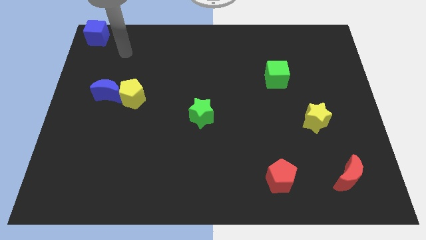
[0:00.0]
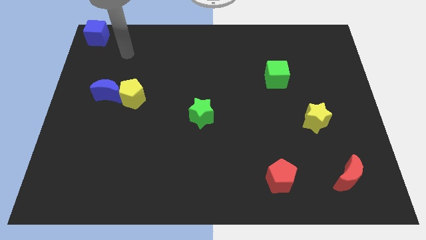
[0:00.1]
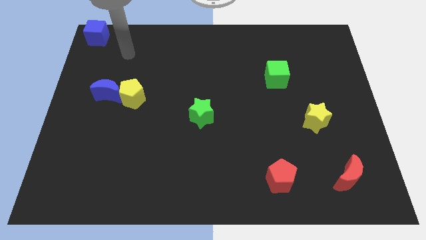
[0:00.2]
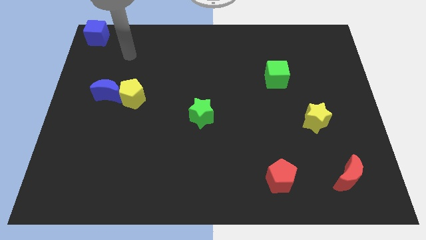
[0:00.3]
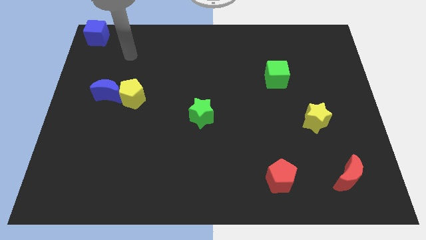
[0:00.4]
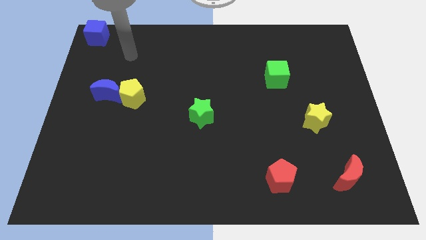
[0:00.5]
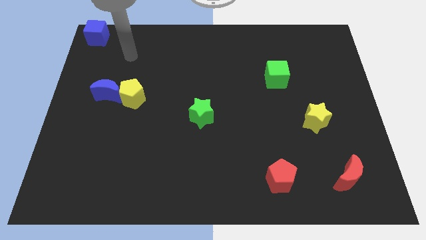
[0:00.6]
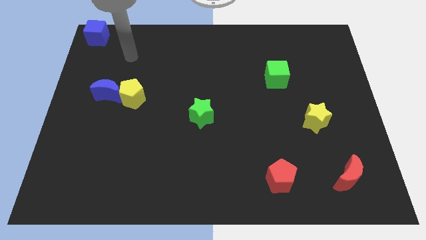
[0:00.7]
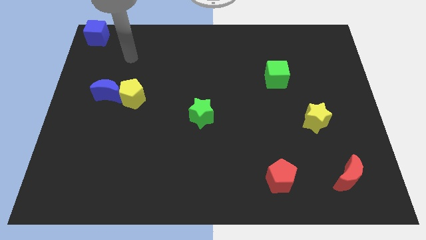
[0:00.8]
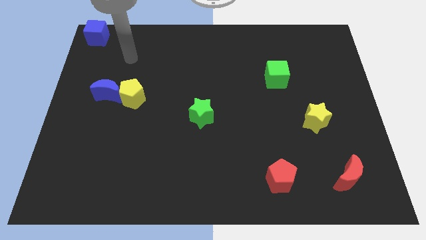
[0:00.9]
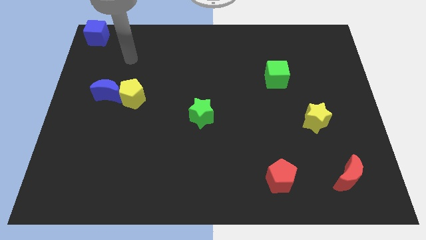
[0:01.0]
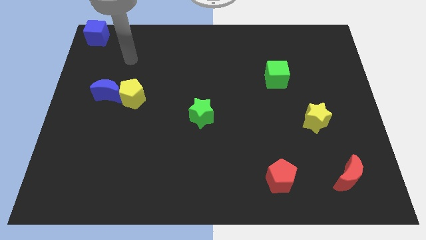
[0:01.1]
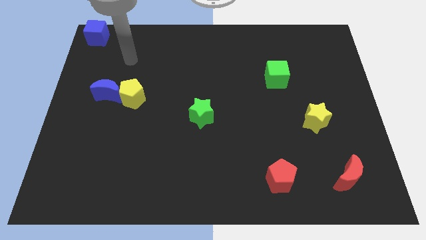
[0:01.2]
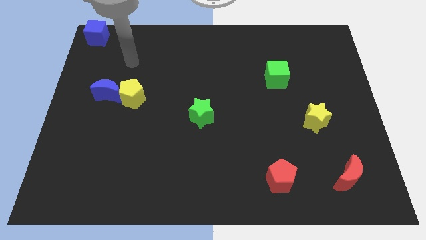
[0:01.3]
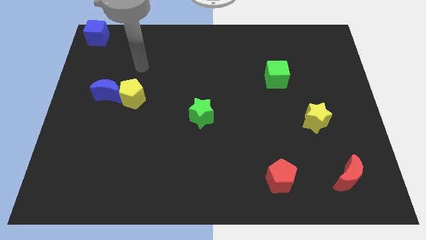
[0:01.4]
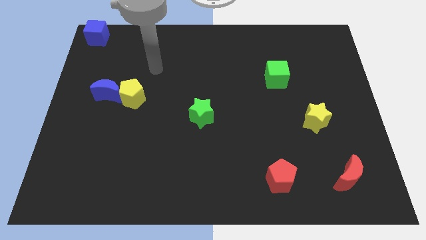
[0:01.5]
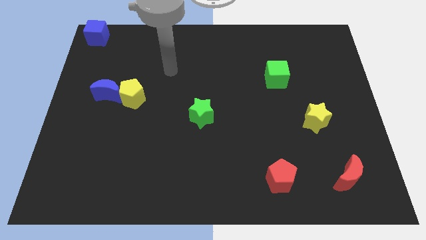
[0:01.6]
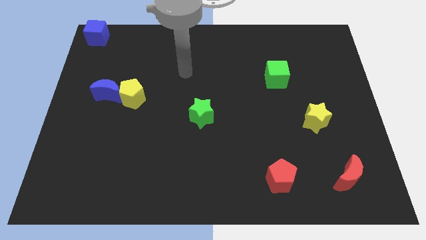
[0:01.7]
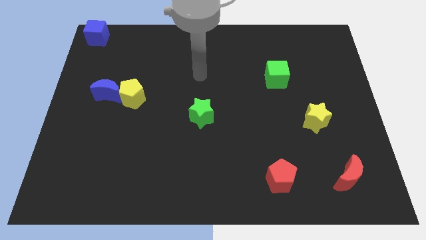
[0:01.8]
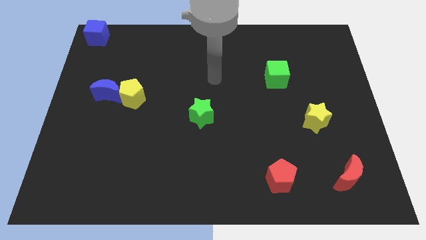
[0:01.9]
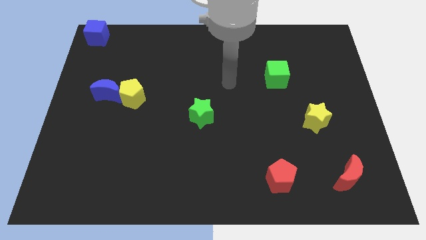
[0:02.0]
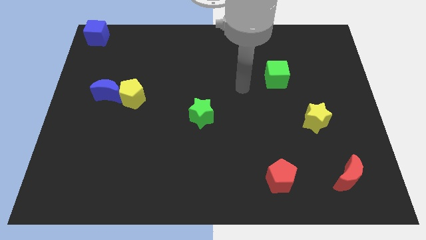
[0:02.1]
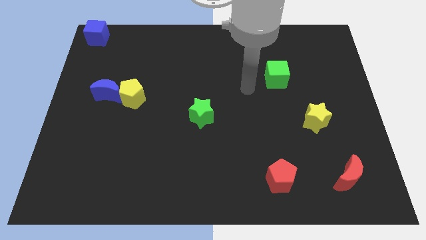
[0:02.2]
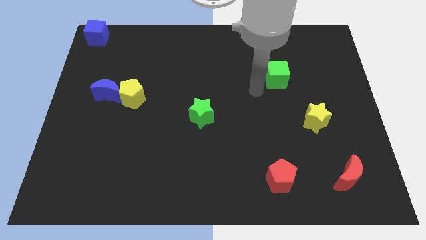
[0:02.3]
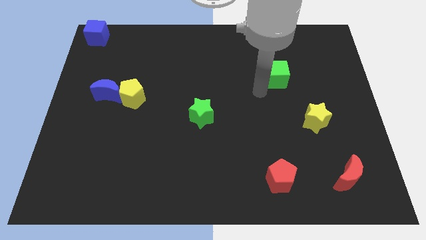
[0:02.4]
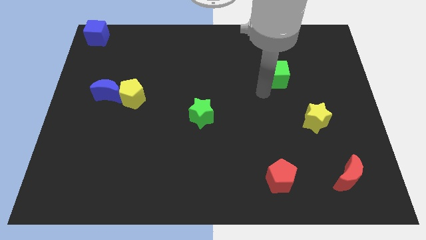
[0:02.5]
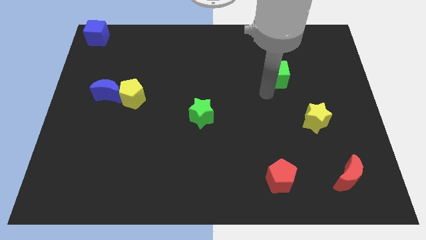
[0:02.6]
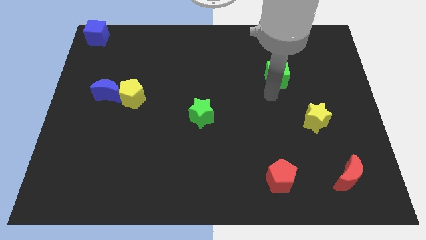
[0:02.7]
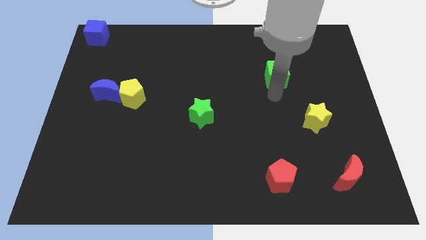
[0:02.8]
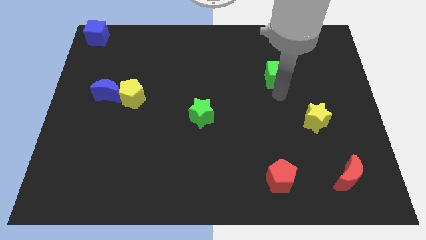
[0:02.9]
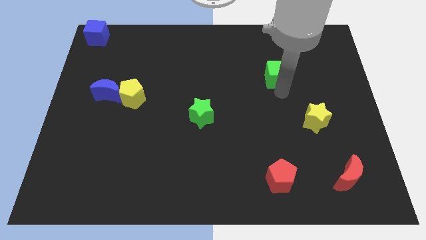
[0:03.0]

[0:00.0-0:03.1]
go near green cube

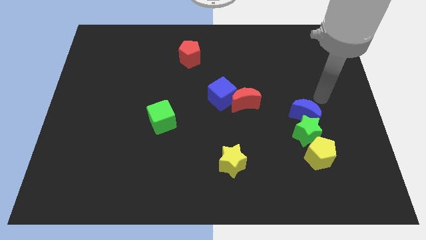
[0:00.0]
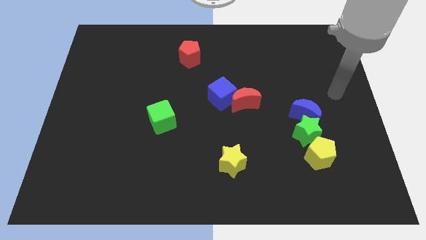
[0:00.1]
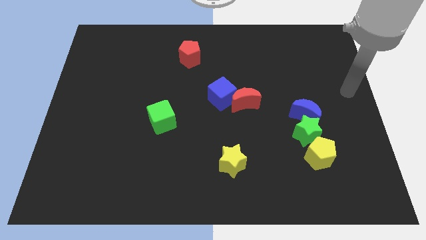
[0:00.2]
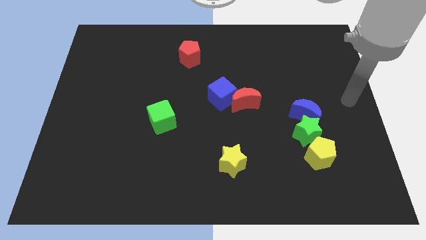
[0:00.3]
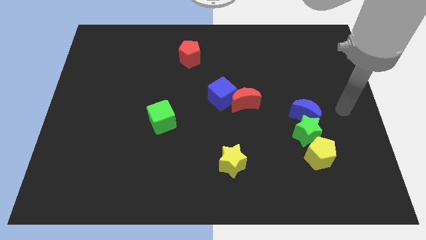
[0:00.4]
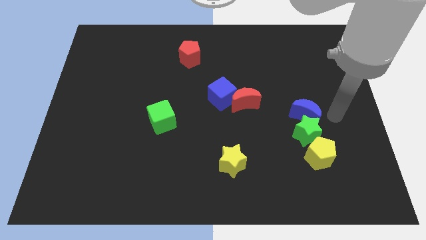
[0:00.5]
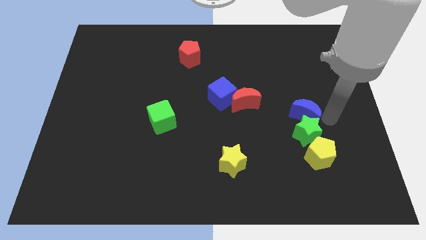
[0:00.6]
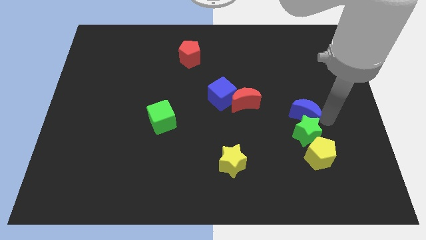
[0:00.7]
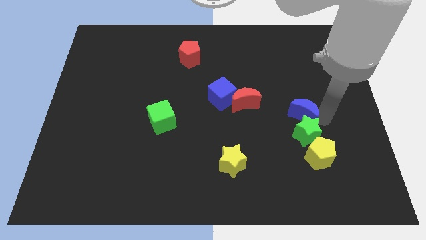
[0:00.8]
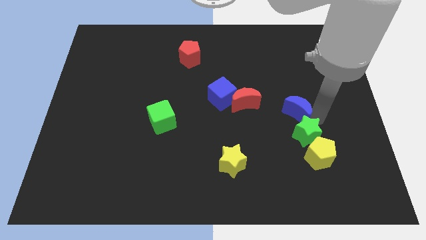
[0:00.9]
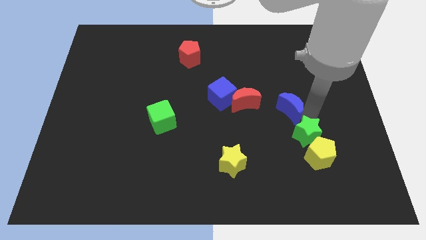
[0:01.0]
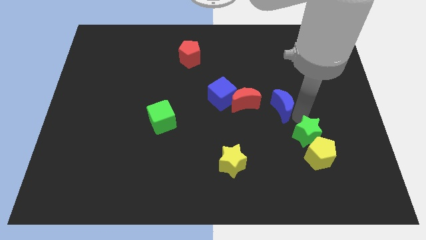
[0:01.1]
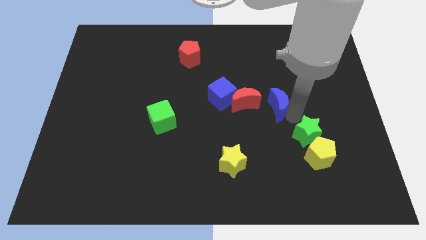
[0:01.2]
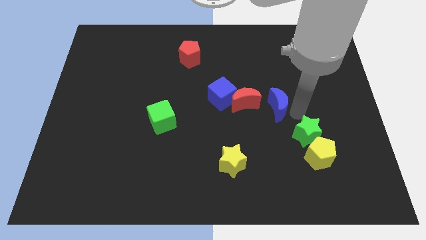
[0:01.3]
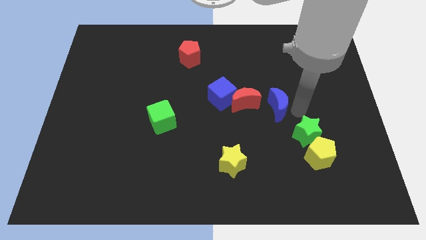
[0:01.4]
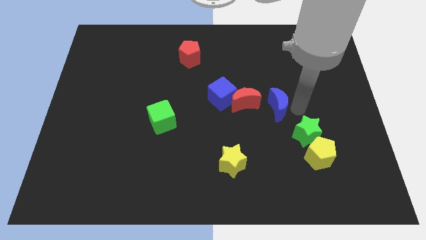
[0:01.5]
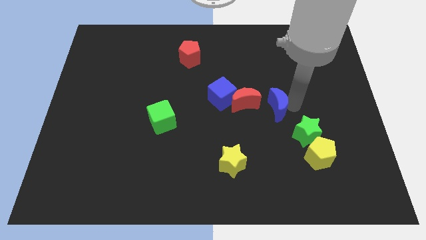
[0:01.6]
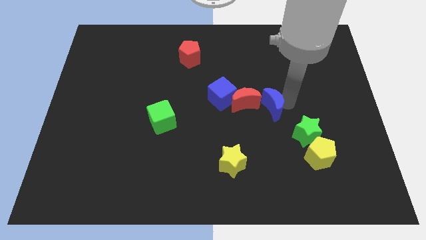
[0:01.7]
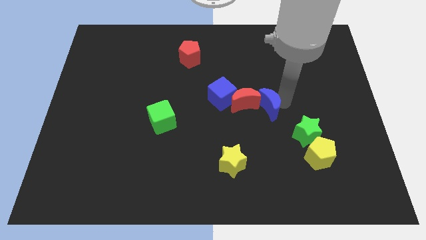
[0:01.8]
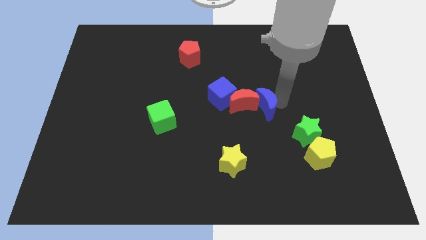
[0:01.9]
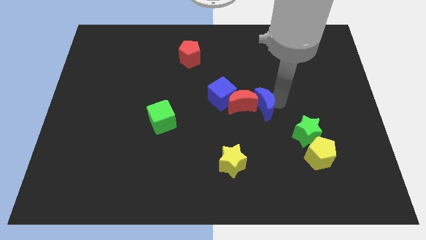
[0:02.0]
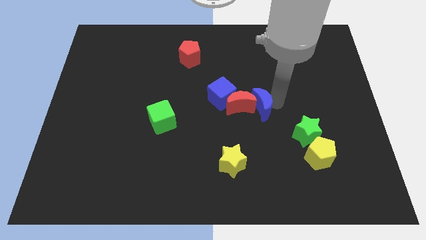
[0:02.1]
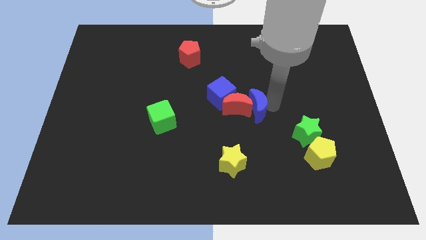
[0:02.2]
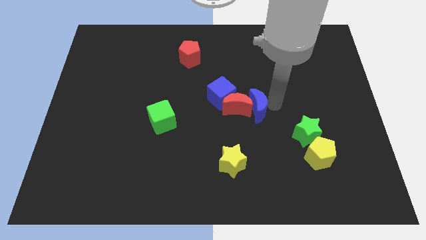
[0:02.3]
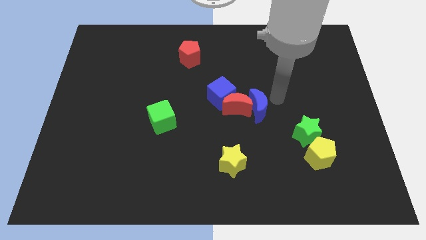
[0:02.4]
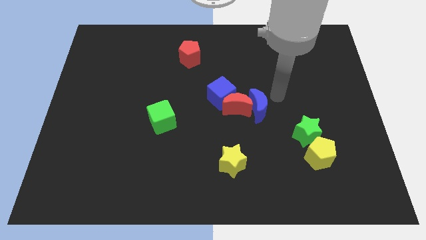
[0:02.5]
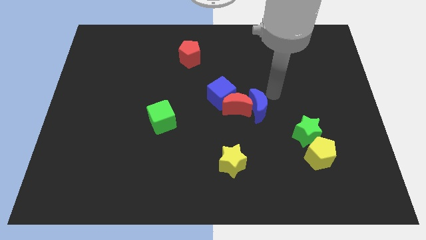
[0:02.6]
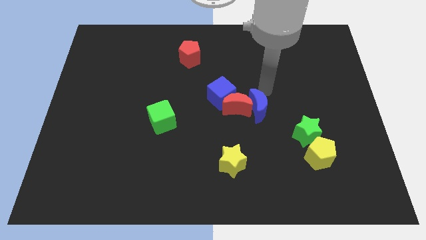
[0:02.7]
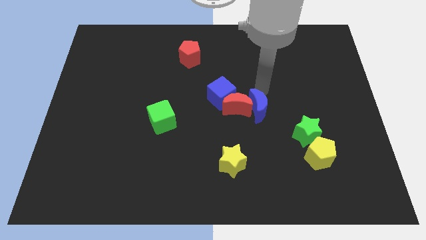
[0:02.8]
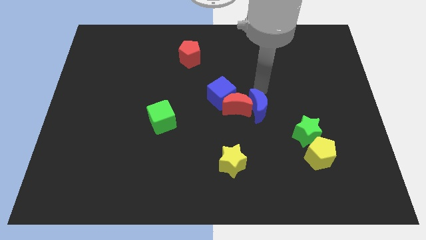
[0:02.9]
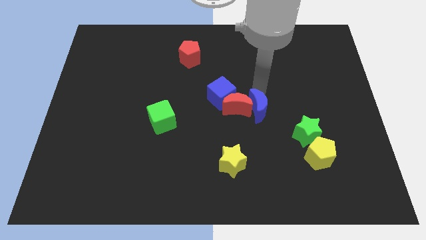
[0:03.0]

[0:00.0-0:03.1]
move blue crescent into red crescent

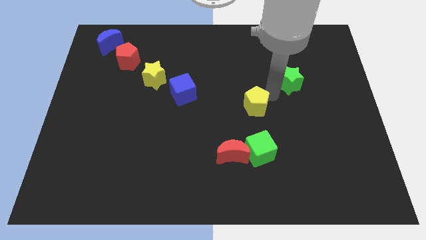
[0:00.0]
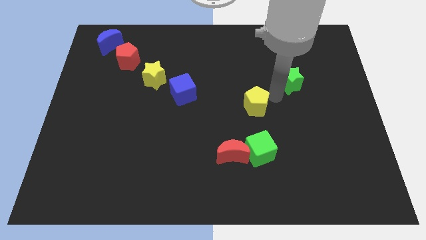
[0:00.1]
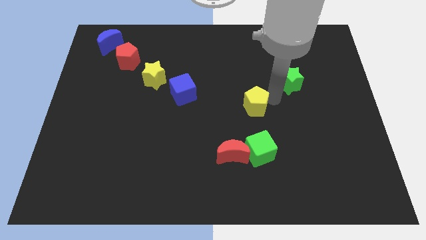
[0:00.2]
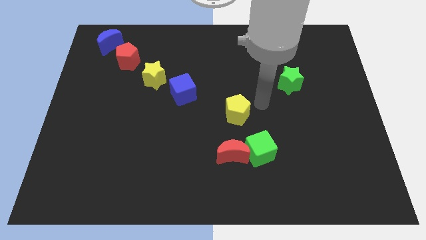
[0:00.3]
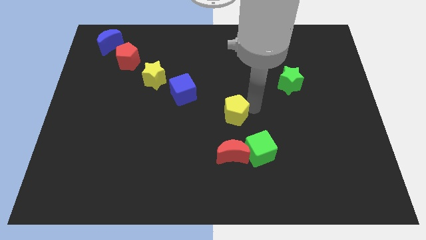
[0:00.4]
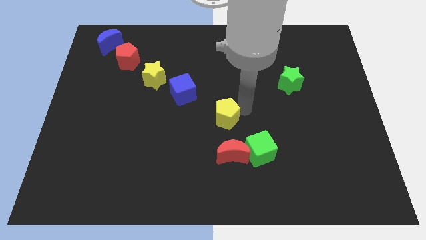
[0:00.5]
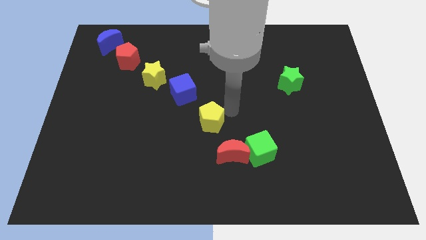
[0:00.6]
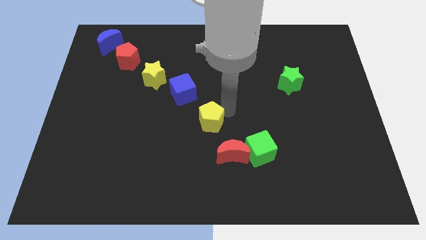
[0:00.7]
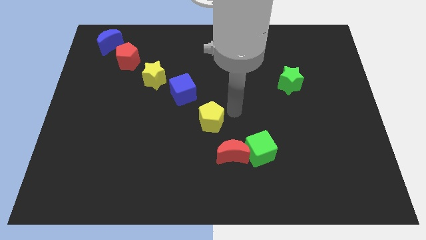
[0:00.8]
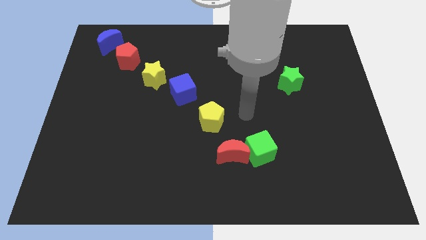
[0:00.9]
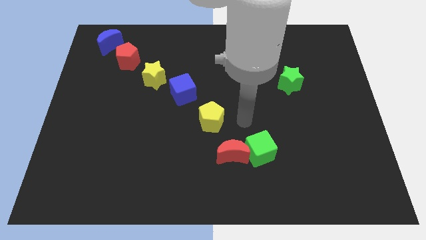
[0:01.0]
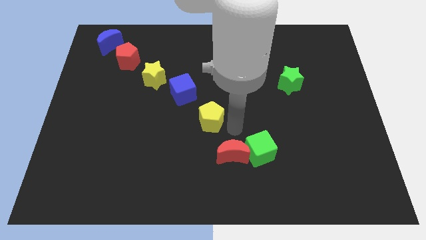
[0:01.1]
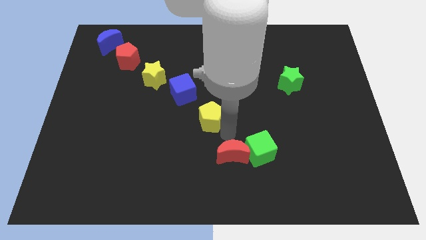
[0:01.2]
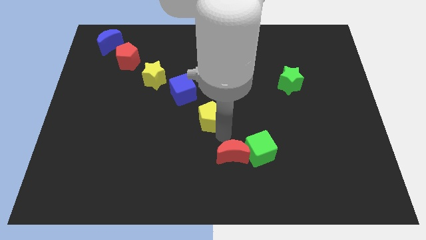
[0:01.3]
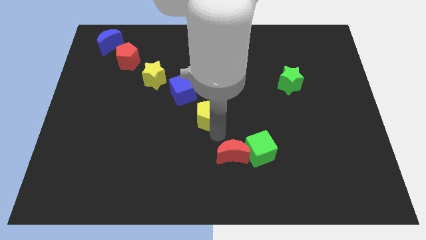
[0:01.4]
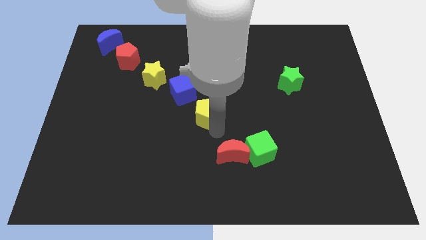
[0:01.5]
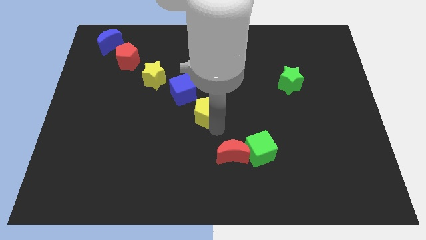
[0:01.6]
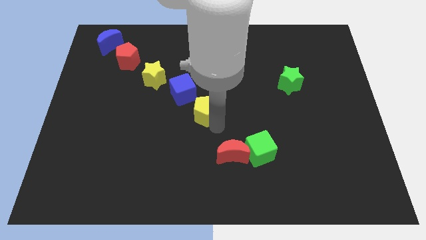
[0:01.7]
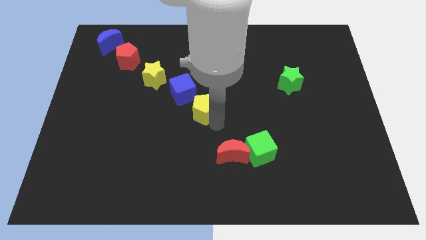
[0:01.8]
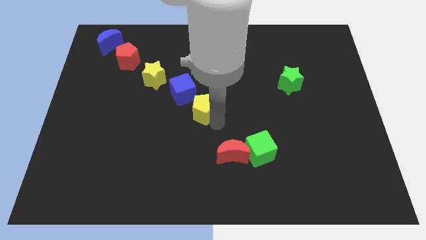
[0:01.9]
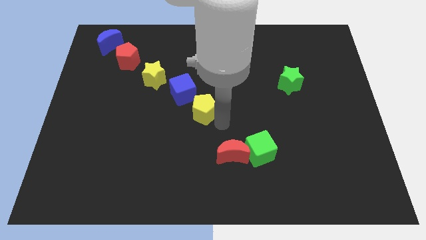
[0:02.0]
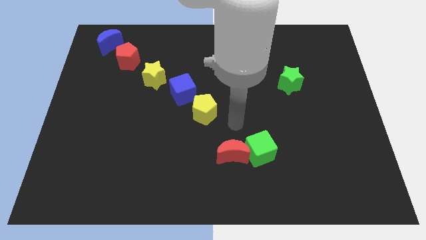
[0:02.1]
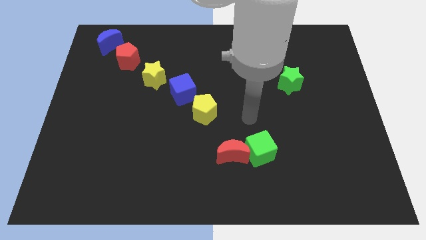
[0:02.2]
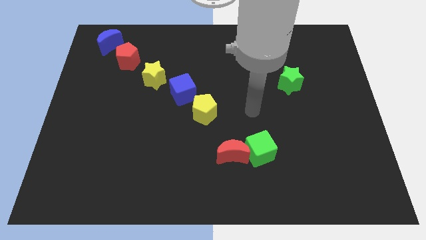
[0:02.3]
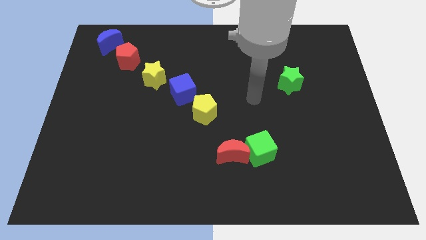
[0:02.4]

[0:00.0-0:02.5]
place yellow pentagon close to the blue cube

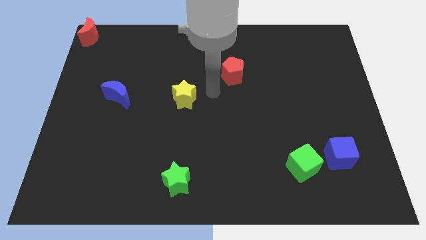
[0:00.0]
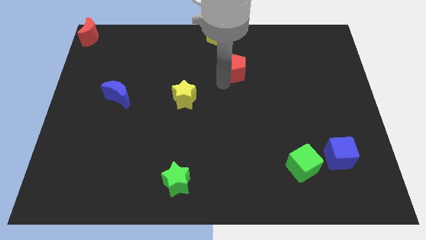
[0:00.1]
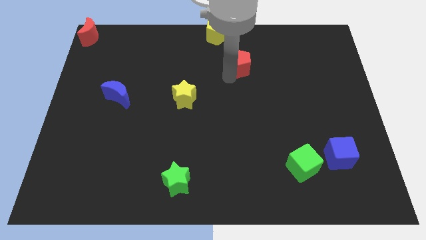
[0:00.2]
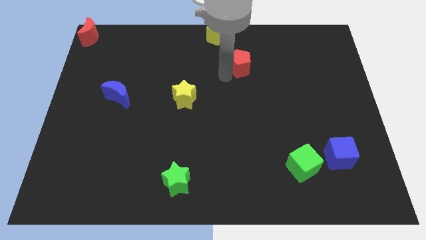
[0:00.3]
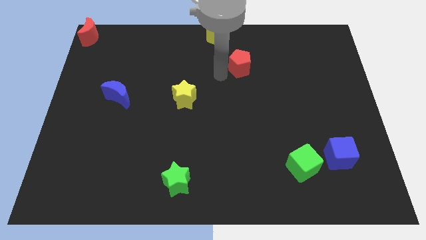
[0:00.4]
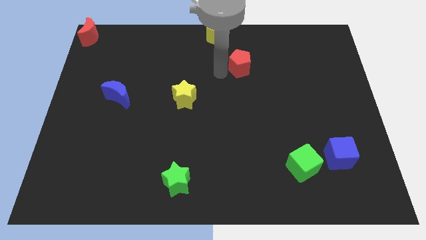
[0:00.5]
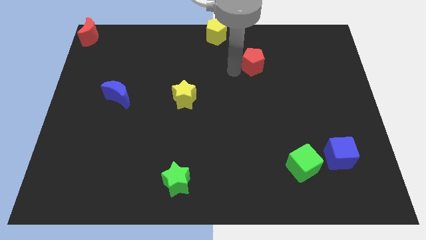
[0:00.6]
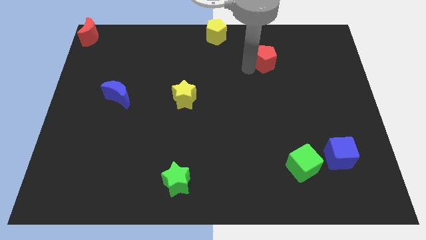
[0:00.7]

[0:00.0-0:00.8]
place the red pentagon diagonally to yellow pentagon
